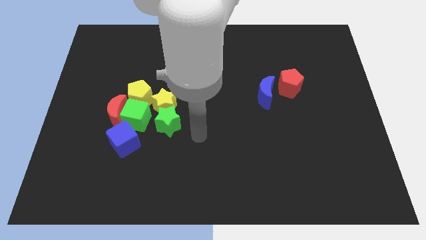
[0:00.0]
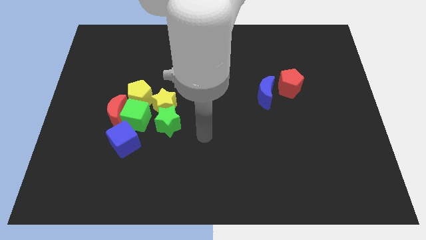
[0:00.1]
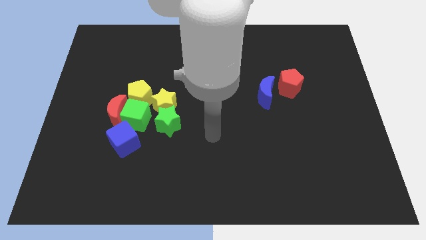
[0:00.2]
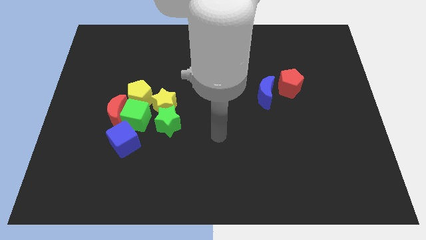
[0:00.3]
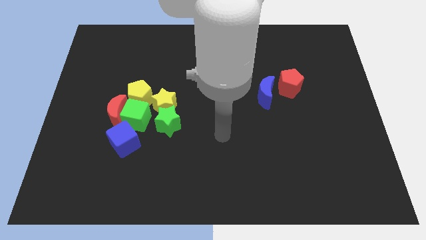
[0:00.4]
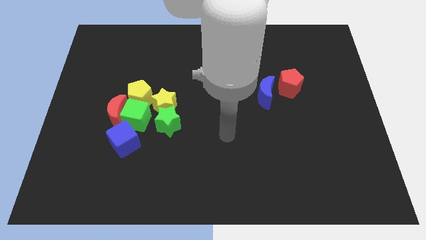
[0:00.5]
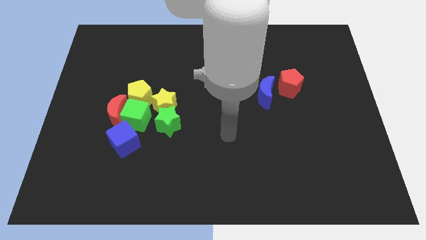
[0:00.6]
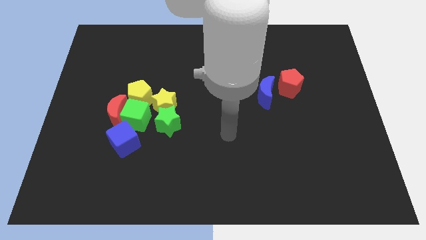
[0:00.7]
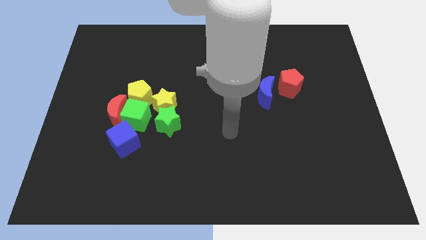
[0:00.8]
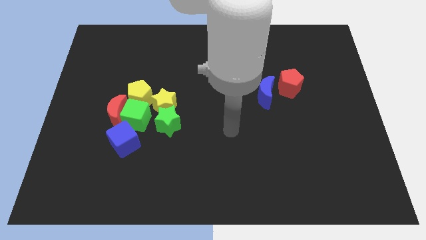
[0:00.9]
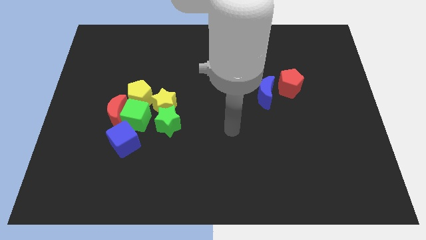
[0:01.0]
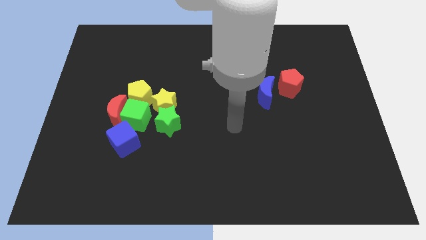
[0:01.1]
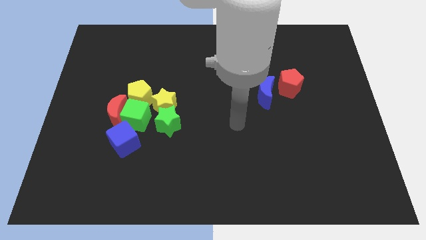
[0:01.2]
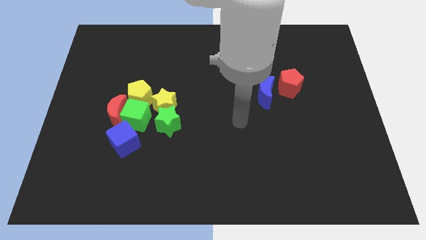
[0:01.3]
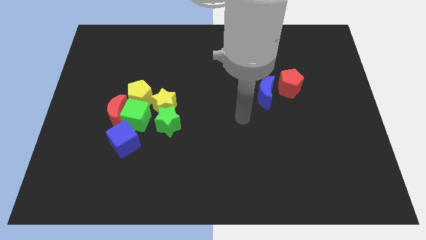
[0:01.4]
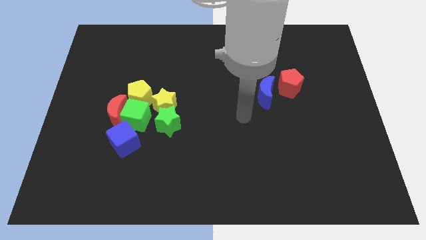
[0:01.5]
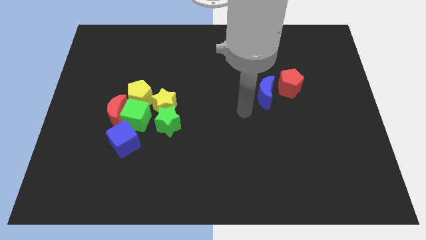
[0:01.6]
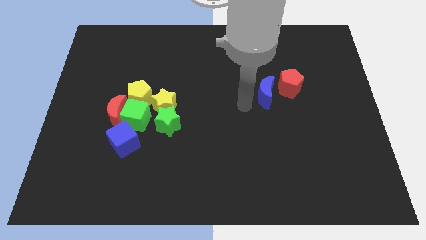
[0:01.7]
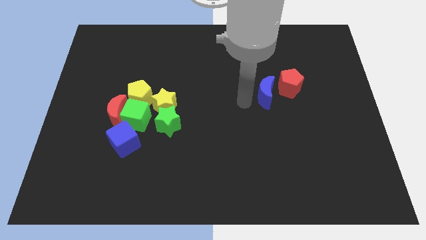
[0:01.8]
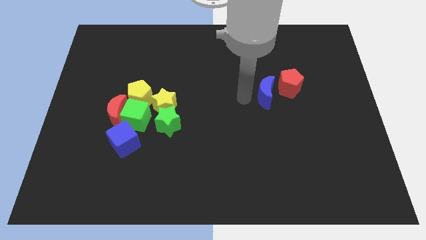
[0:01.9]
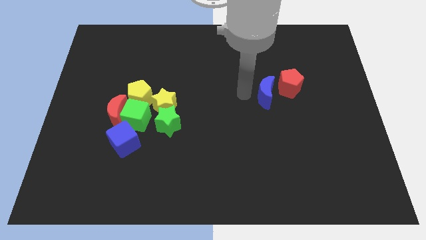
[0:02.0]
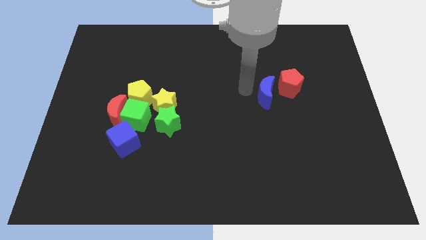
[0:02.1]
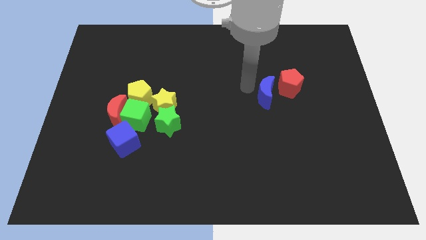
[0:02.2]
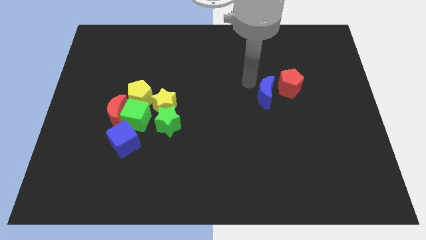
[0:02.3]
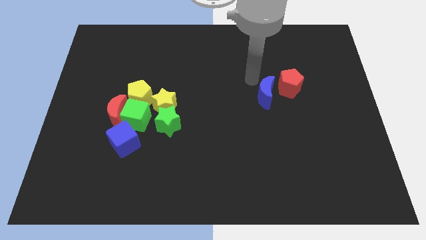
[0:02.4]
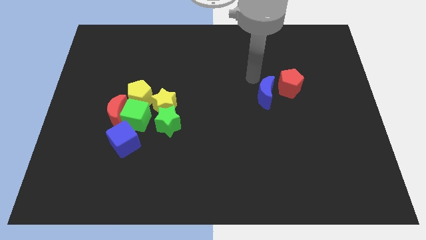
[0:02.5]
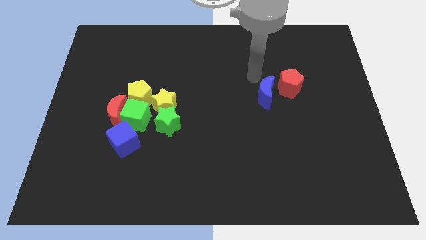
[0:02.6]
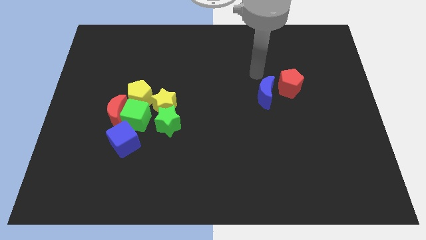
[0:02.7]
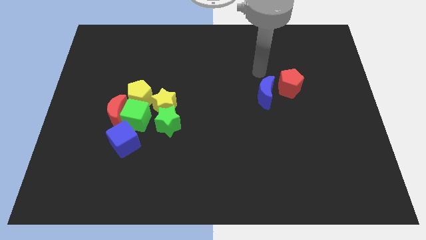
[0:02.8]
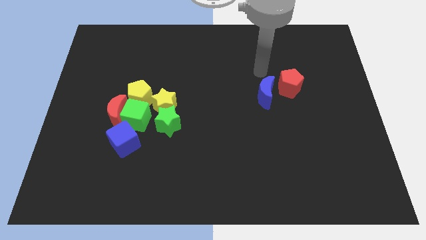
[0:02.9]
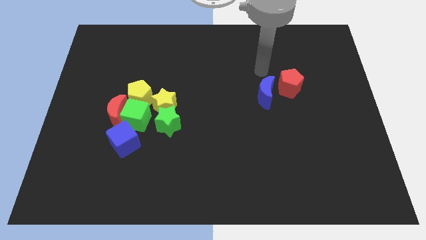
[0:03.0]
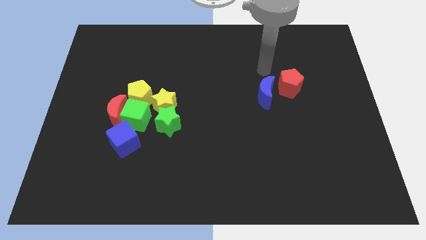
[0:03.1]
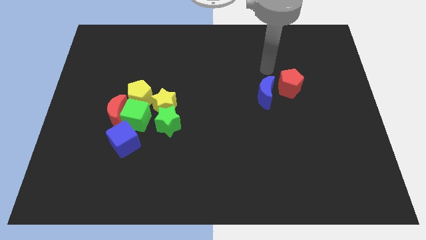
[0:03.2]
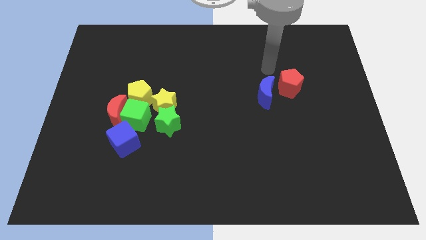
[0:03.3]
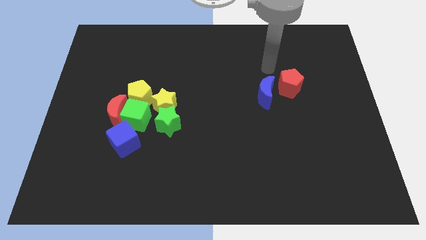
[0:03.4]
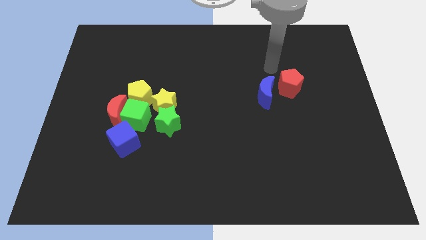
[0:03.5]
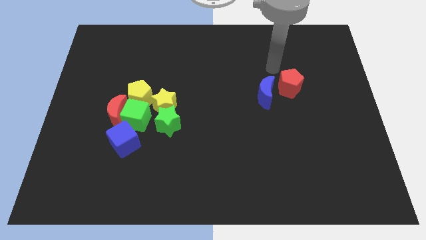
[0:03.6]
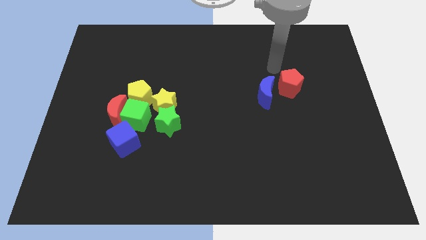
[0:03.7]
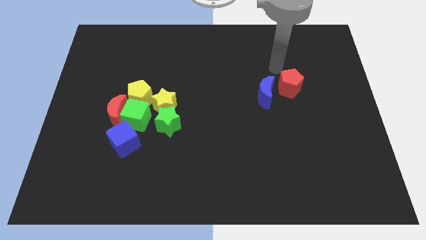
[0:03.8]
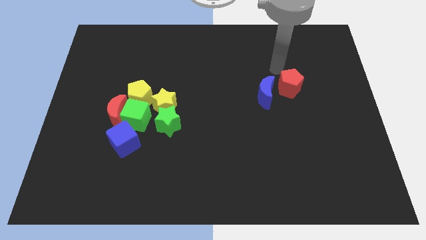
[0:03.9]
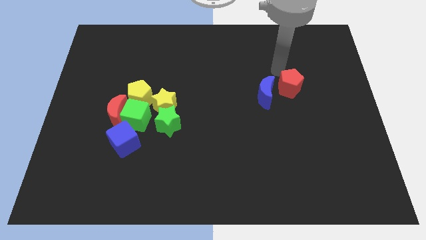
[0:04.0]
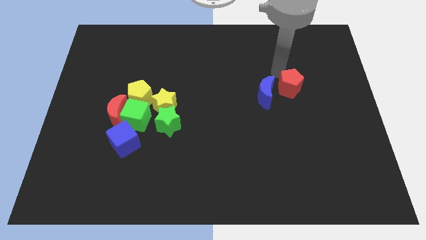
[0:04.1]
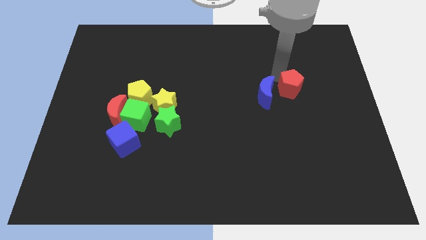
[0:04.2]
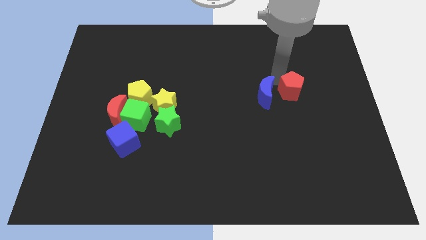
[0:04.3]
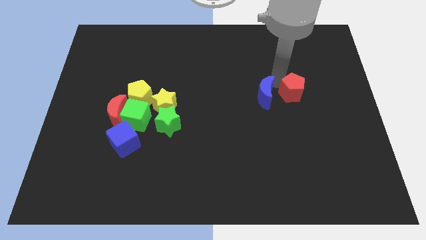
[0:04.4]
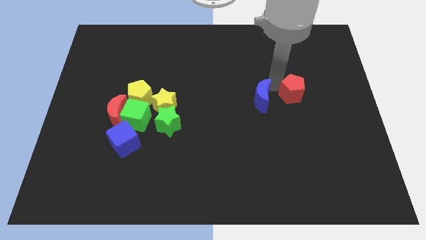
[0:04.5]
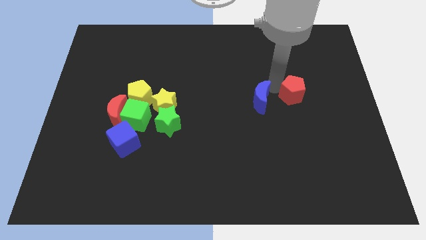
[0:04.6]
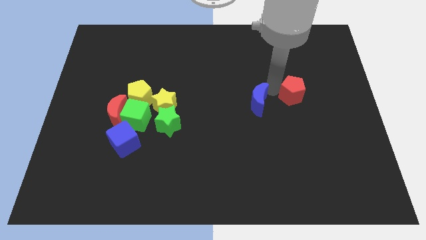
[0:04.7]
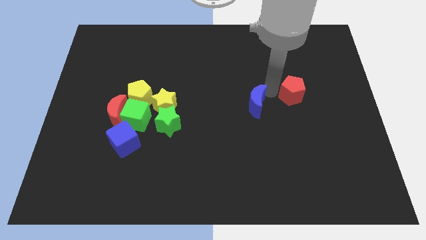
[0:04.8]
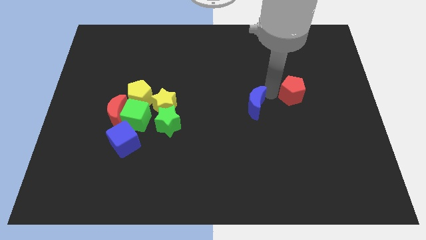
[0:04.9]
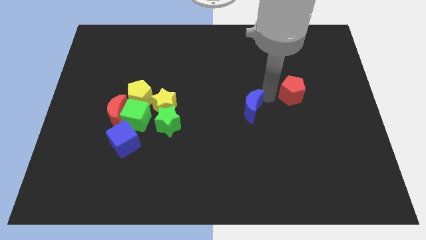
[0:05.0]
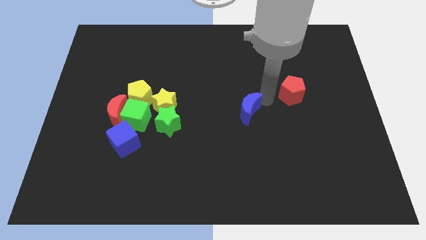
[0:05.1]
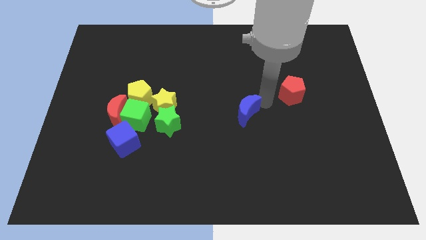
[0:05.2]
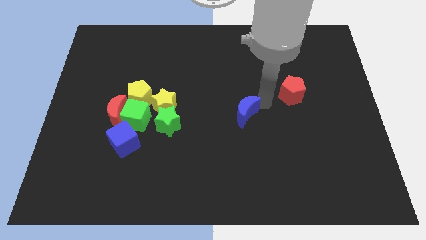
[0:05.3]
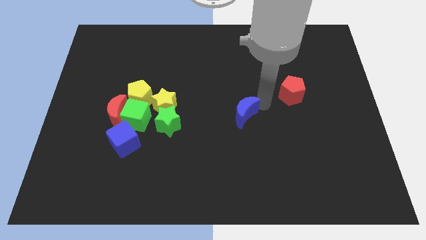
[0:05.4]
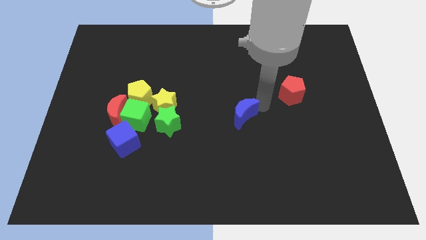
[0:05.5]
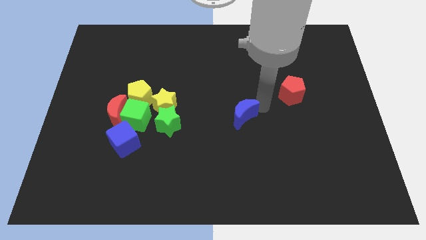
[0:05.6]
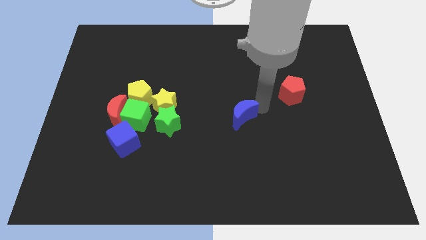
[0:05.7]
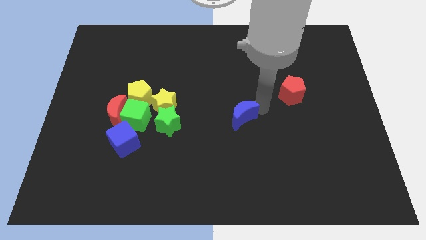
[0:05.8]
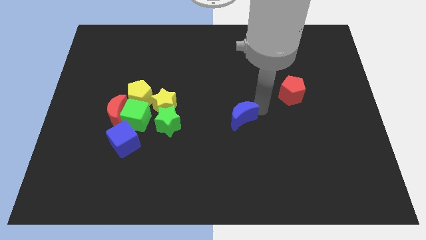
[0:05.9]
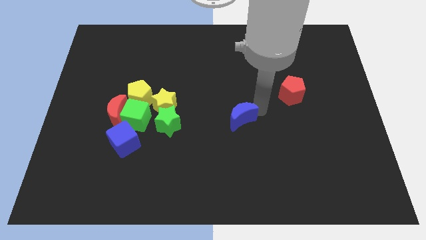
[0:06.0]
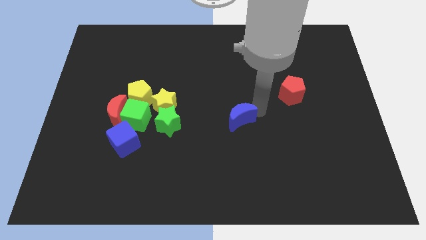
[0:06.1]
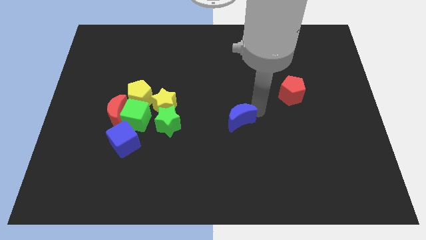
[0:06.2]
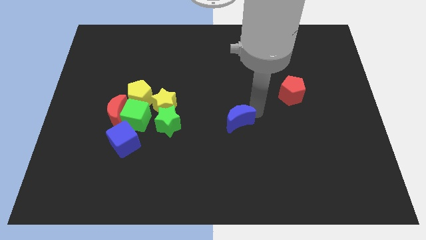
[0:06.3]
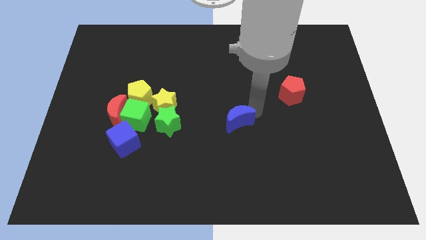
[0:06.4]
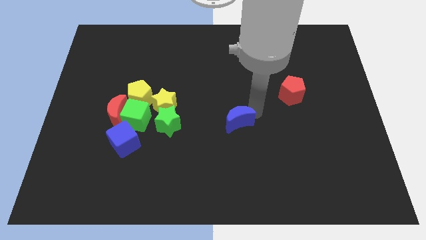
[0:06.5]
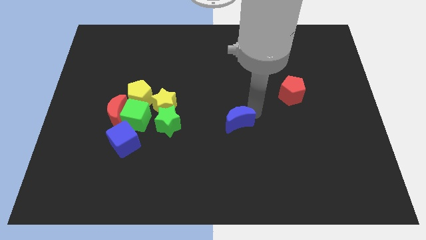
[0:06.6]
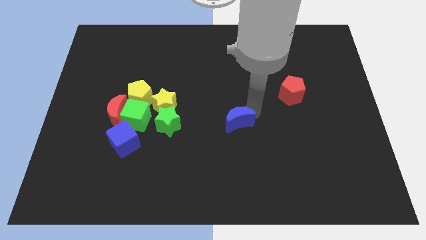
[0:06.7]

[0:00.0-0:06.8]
separate the blue crescent from the red pentagon

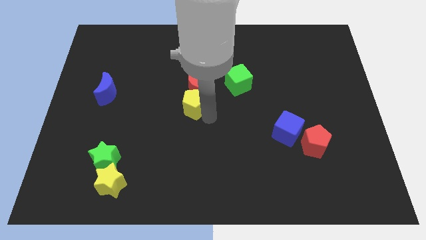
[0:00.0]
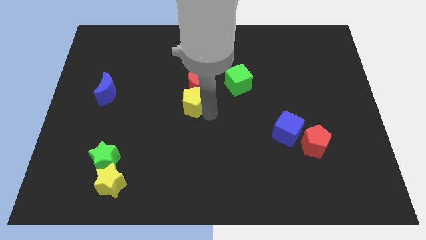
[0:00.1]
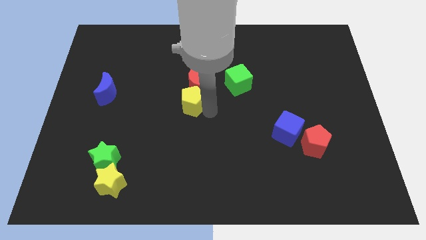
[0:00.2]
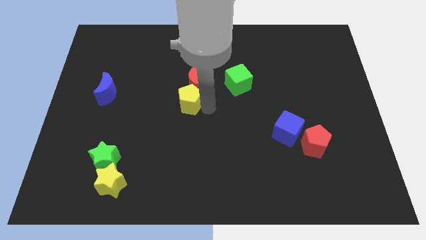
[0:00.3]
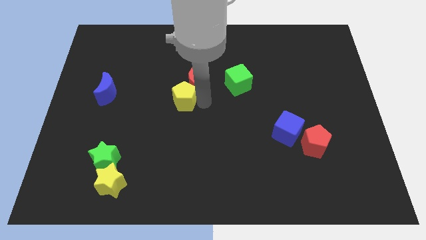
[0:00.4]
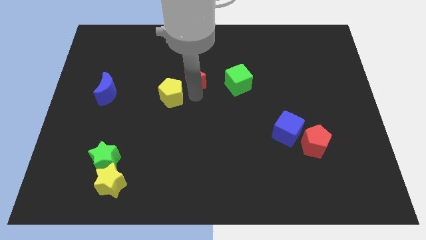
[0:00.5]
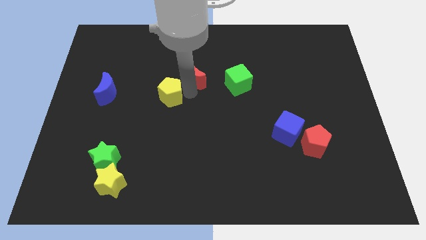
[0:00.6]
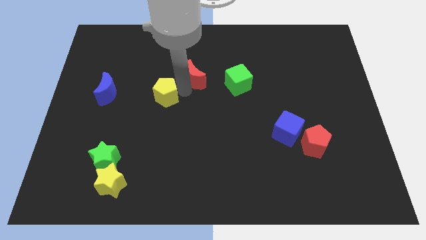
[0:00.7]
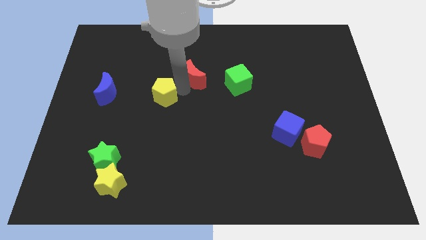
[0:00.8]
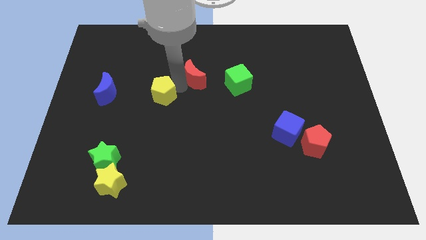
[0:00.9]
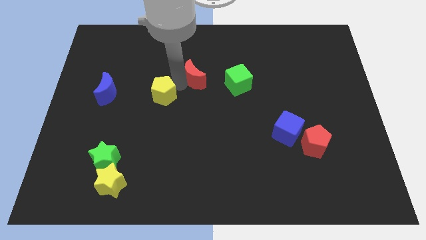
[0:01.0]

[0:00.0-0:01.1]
move yellow pentagon to the right of blue moon

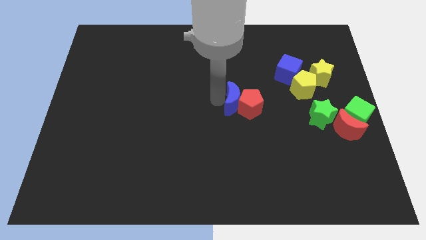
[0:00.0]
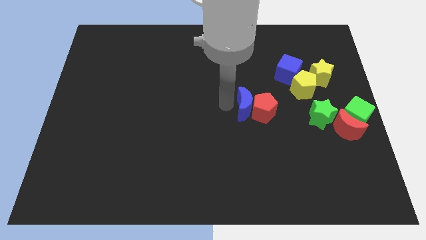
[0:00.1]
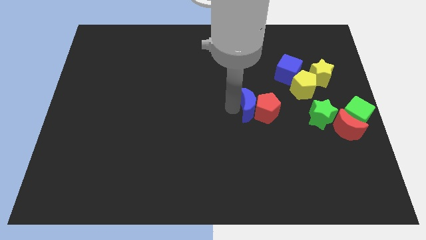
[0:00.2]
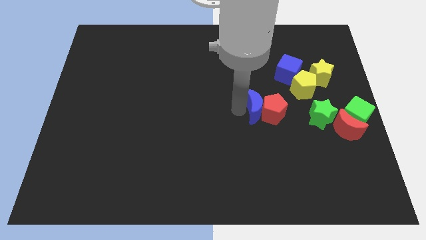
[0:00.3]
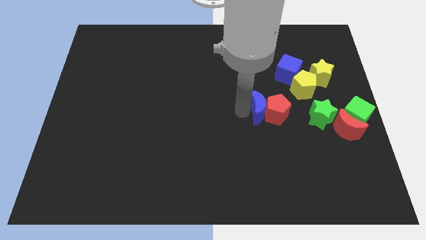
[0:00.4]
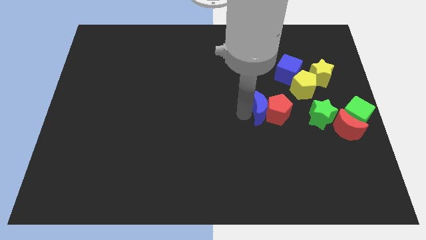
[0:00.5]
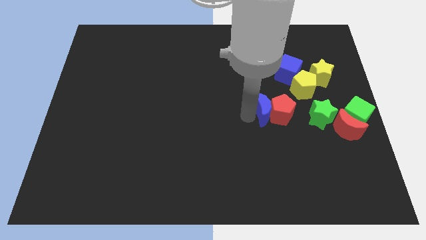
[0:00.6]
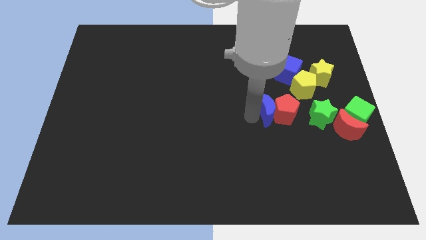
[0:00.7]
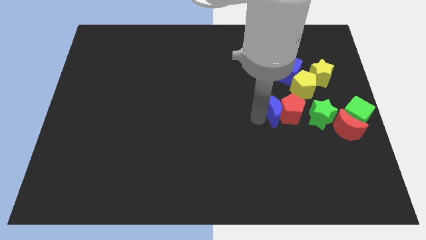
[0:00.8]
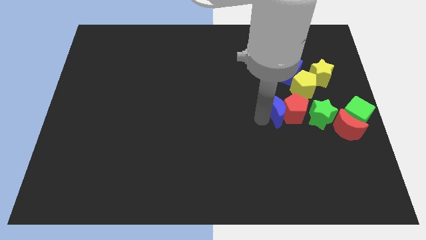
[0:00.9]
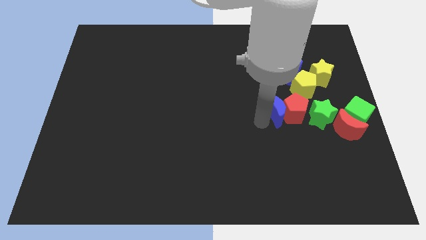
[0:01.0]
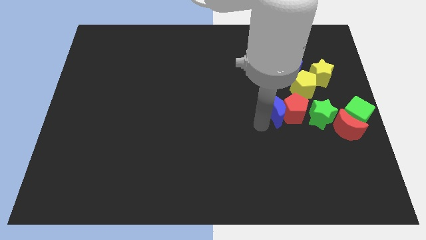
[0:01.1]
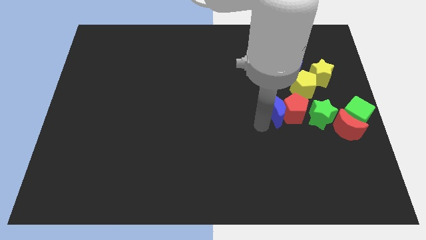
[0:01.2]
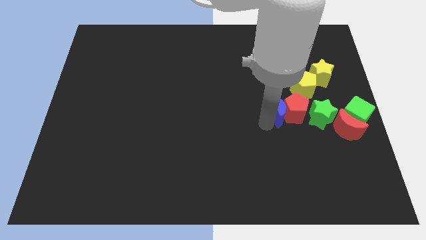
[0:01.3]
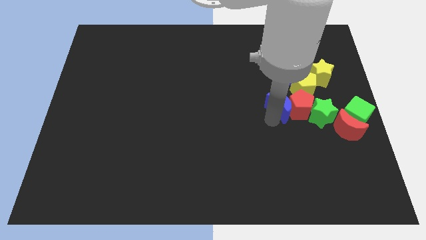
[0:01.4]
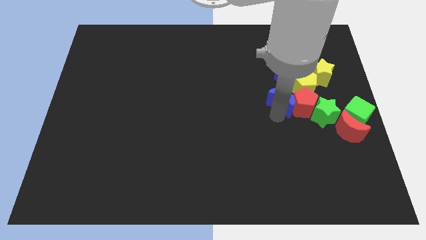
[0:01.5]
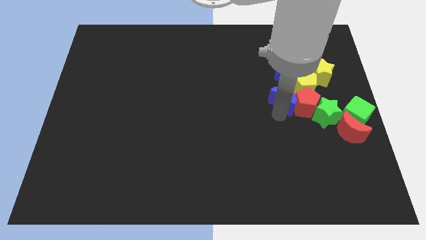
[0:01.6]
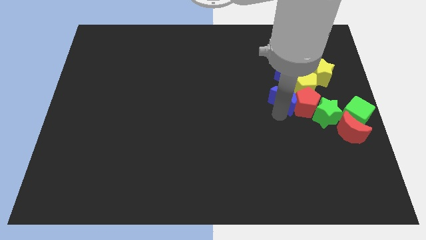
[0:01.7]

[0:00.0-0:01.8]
push the red pentagon with the blue crescent into the green star
